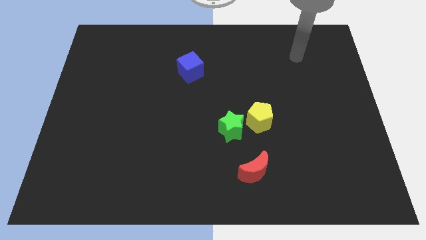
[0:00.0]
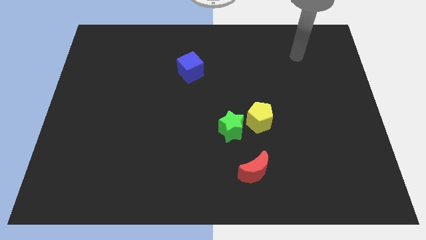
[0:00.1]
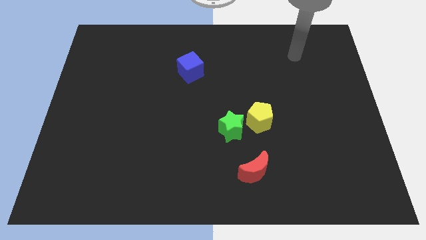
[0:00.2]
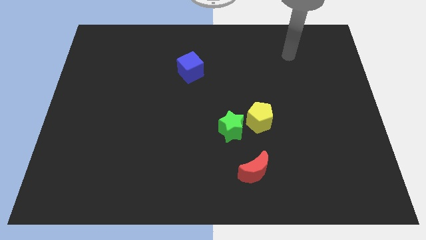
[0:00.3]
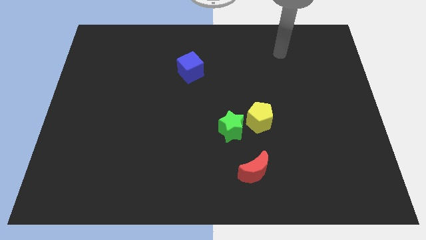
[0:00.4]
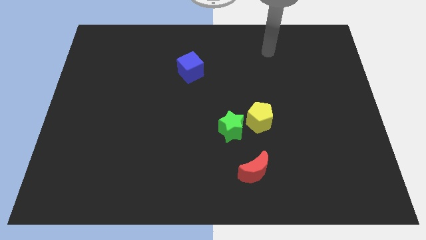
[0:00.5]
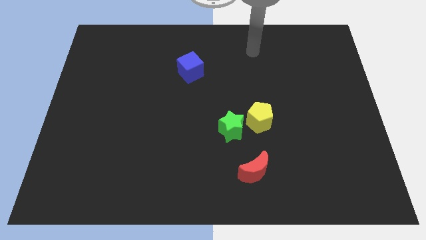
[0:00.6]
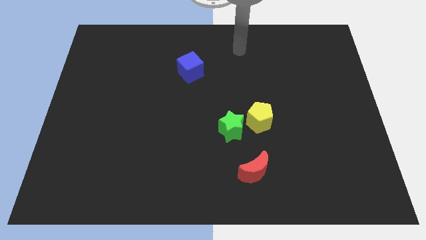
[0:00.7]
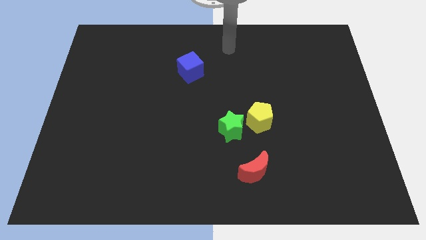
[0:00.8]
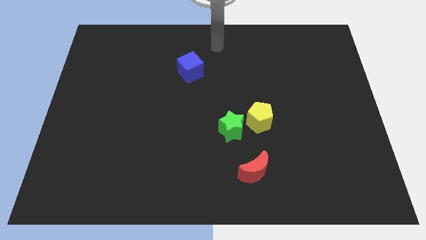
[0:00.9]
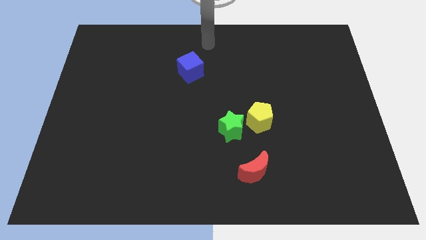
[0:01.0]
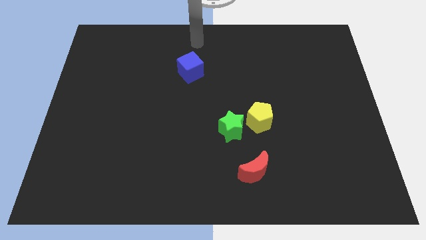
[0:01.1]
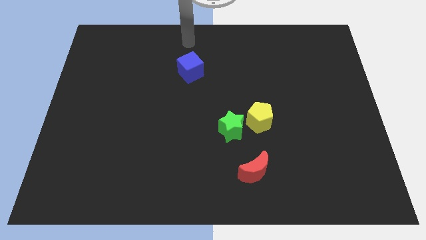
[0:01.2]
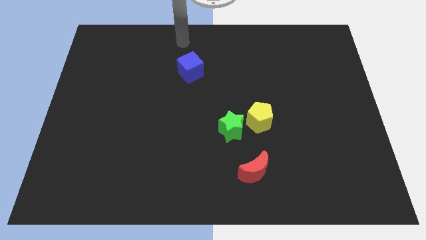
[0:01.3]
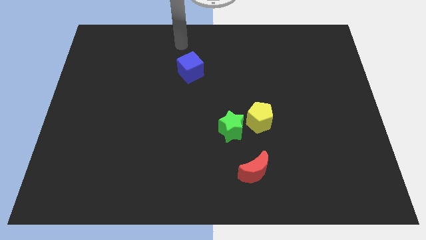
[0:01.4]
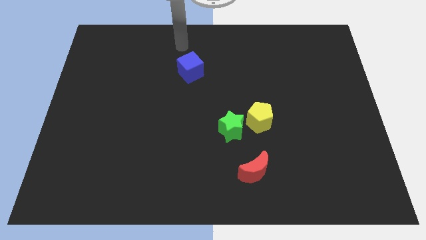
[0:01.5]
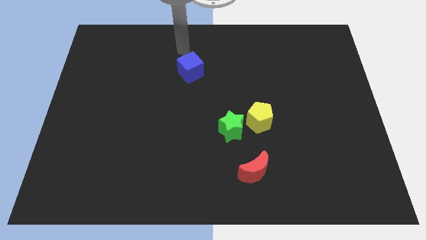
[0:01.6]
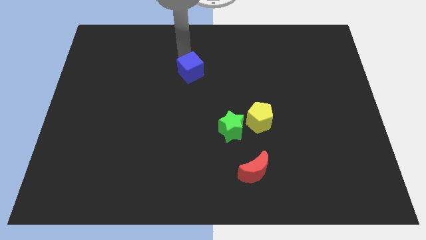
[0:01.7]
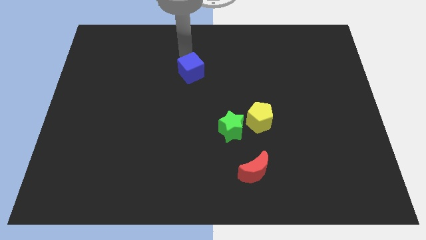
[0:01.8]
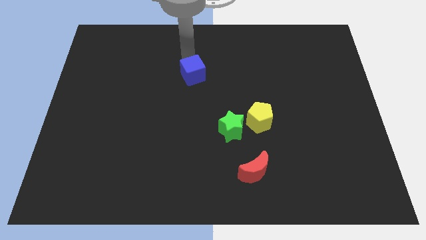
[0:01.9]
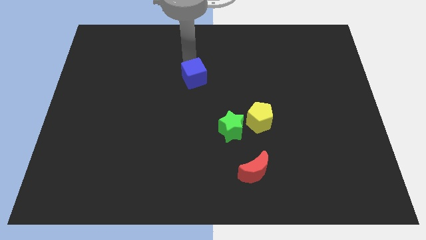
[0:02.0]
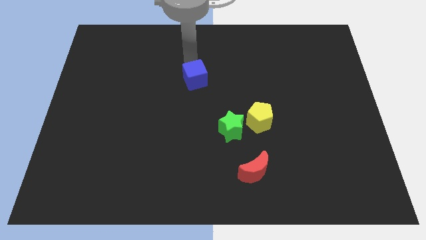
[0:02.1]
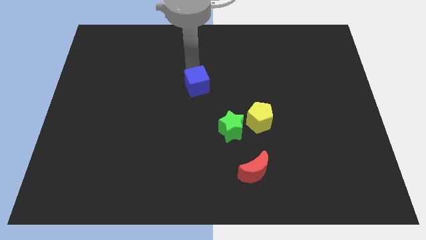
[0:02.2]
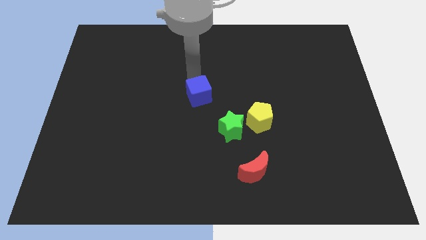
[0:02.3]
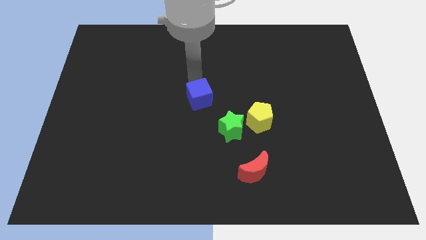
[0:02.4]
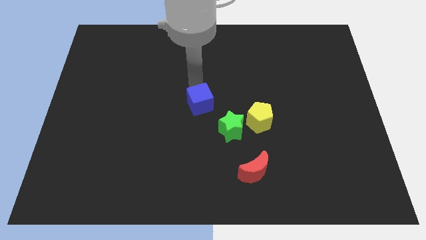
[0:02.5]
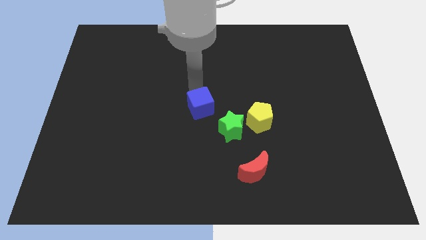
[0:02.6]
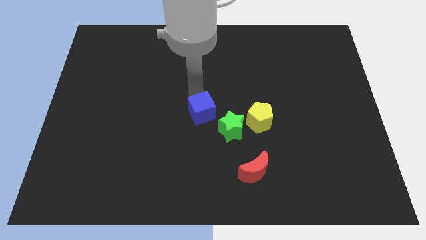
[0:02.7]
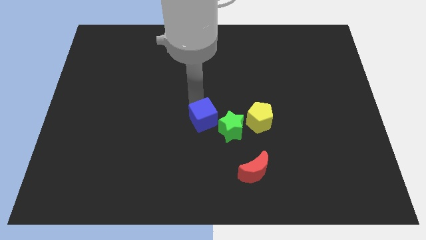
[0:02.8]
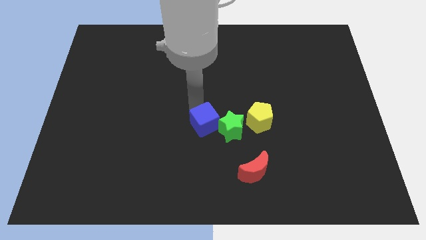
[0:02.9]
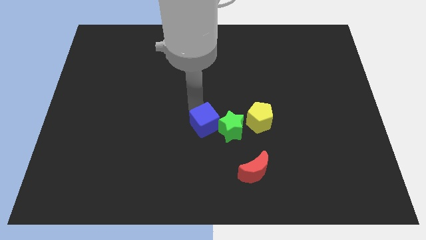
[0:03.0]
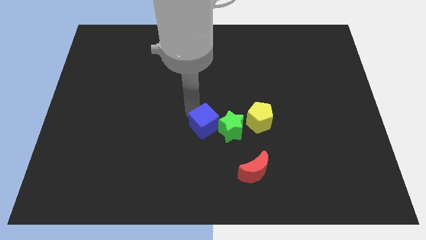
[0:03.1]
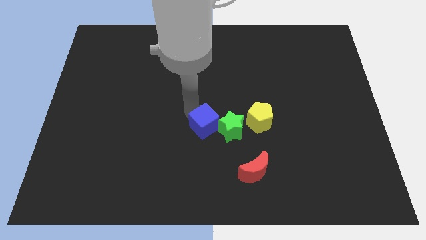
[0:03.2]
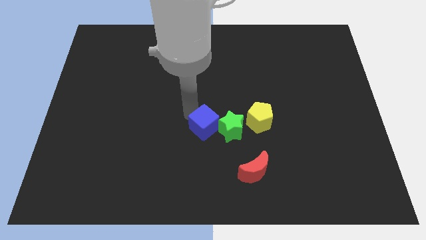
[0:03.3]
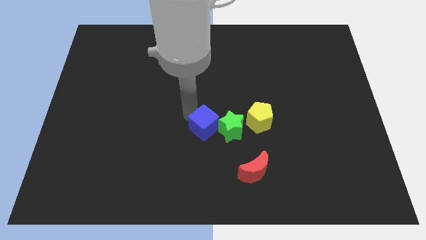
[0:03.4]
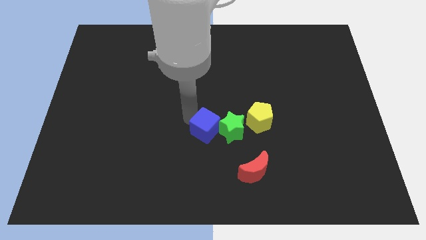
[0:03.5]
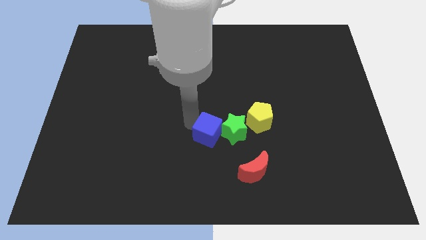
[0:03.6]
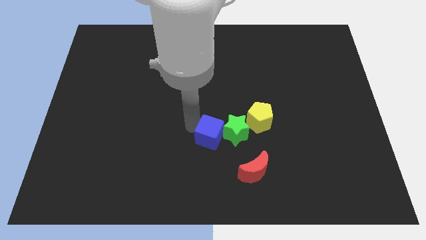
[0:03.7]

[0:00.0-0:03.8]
move the cube to the green block

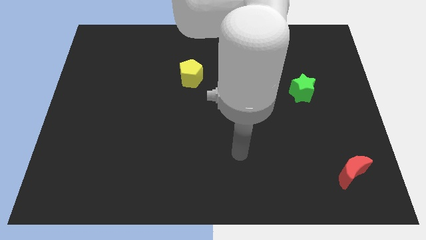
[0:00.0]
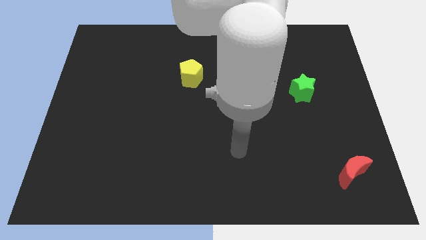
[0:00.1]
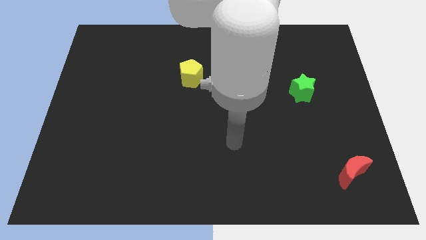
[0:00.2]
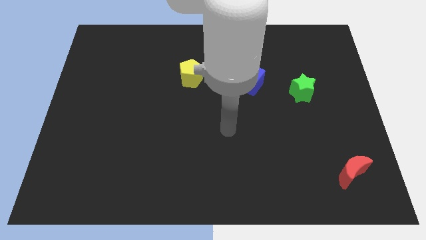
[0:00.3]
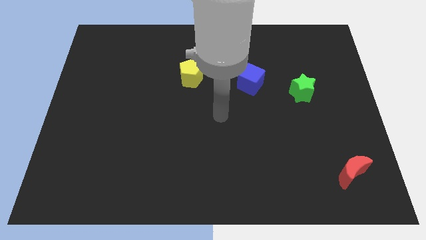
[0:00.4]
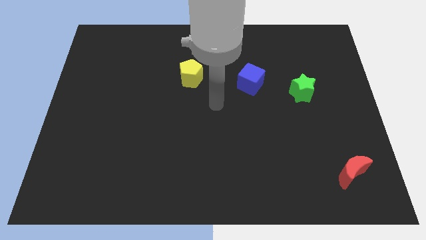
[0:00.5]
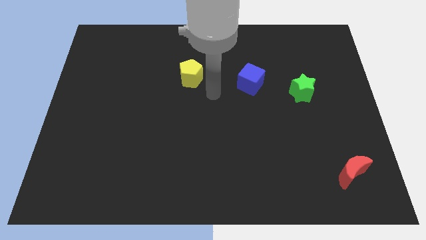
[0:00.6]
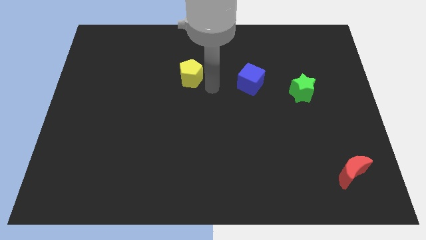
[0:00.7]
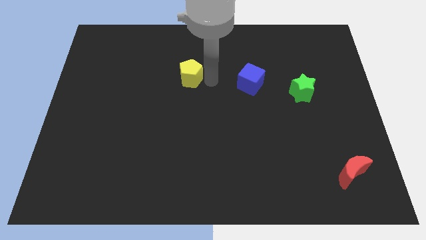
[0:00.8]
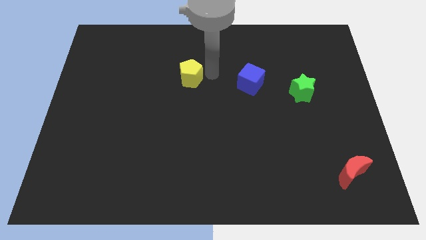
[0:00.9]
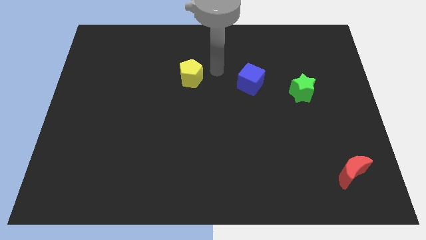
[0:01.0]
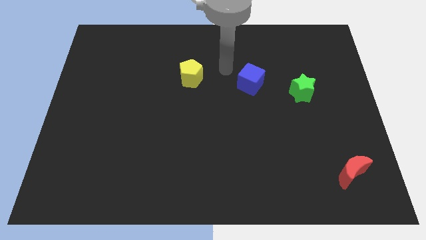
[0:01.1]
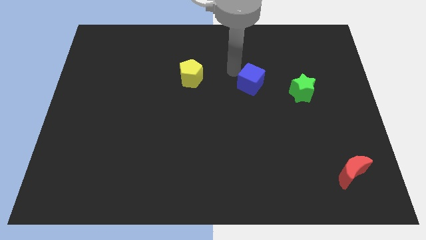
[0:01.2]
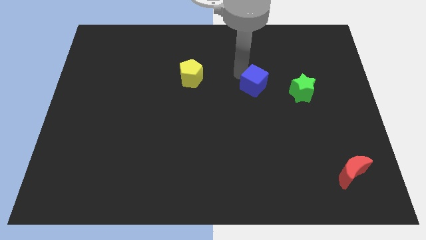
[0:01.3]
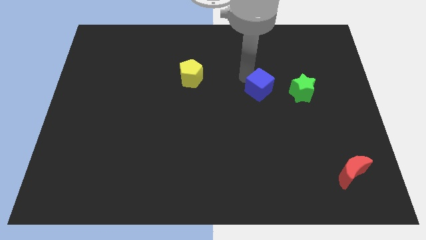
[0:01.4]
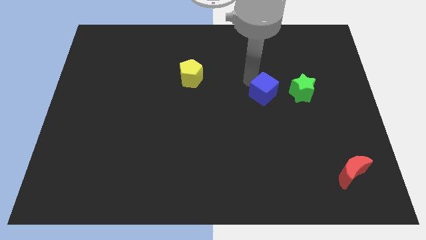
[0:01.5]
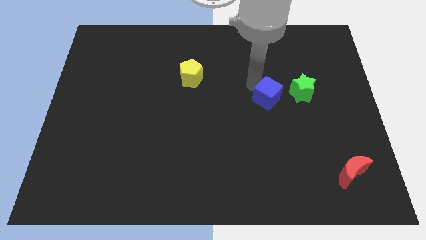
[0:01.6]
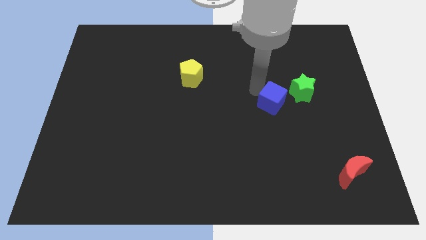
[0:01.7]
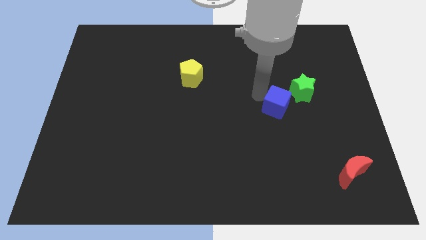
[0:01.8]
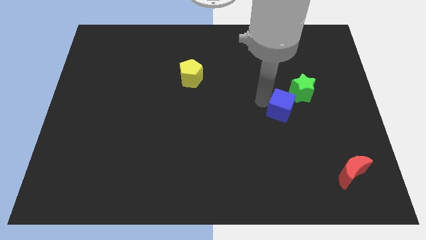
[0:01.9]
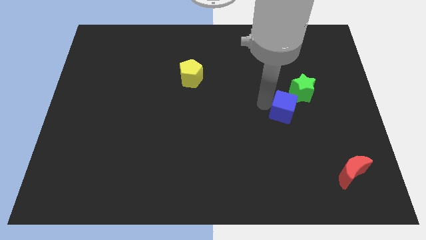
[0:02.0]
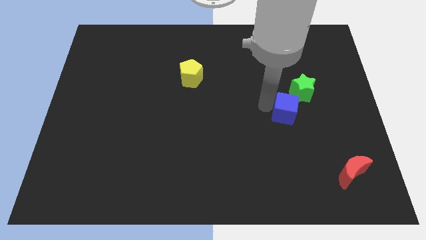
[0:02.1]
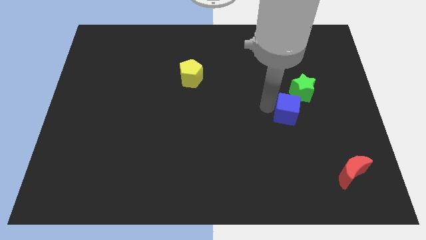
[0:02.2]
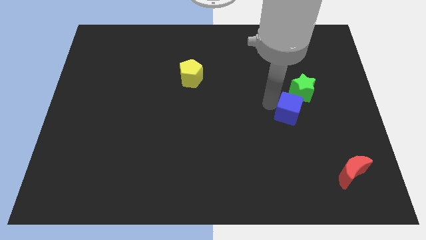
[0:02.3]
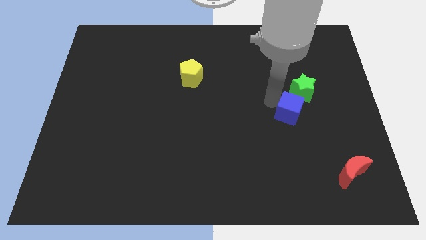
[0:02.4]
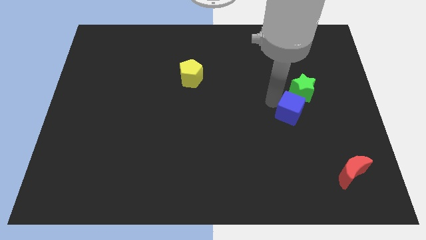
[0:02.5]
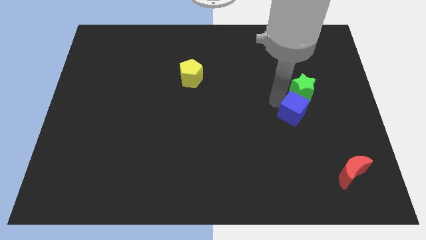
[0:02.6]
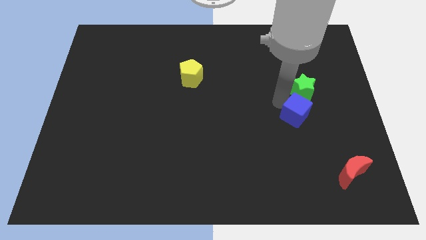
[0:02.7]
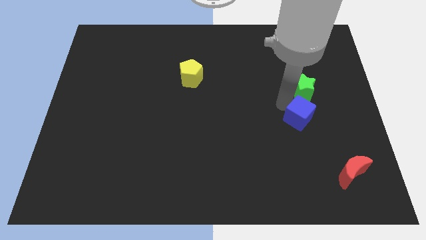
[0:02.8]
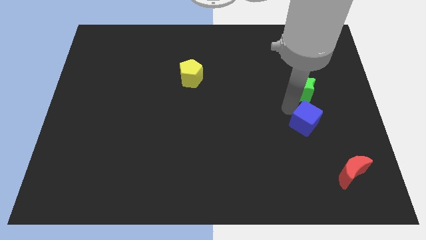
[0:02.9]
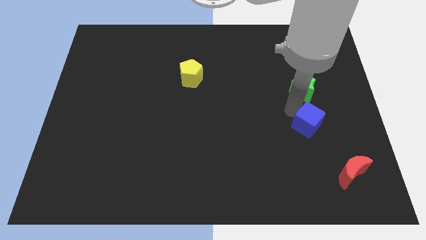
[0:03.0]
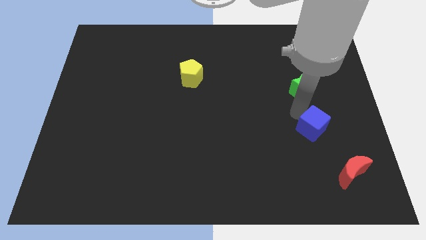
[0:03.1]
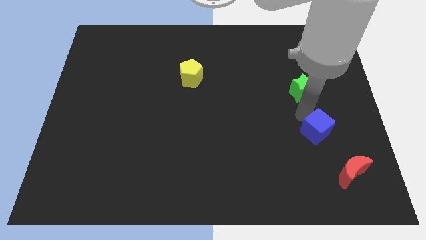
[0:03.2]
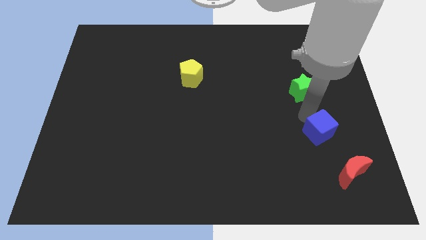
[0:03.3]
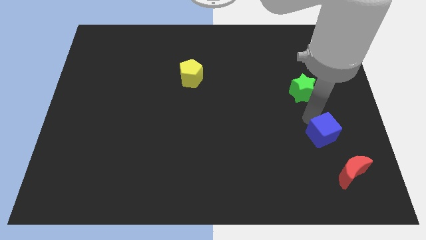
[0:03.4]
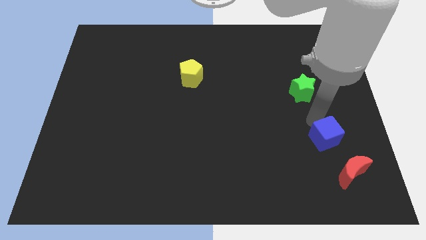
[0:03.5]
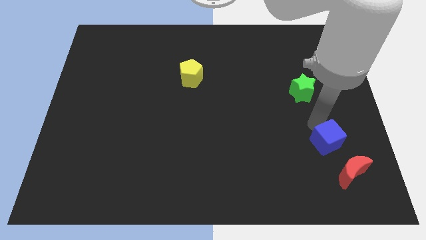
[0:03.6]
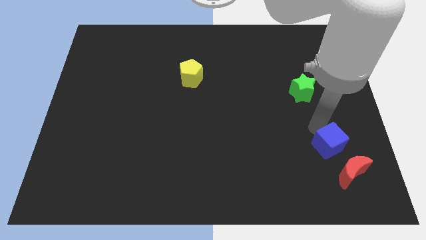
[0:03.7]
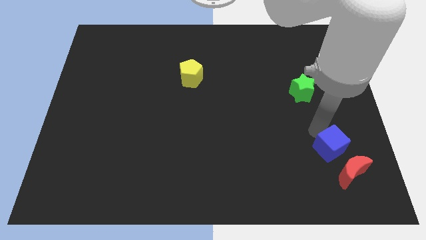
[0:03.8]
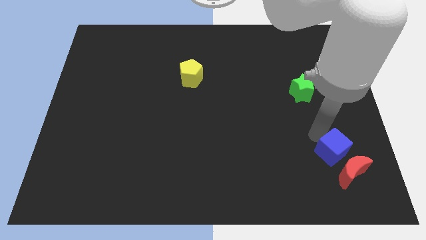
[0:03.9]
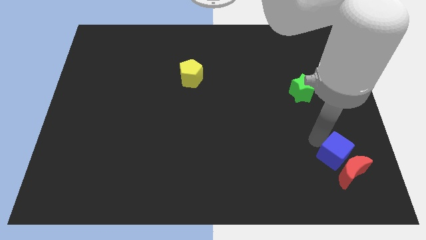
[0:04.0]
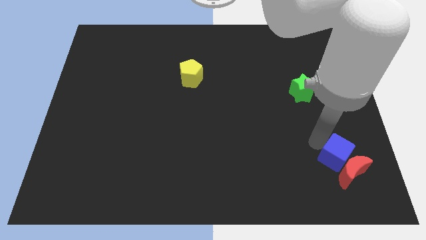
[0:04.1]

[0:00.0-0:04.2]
push the blue cube to the moon

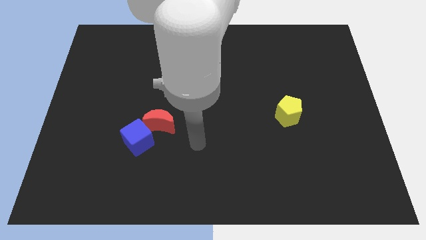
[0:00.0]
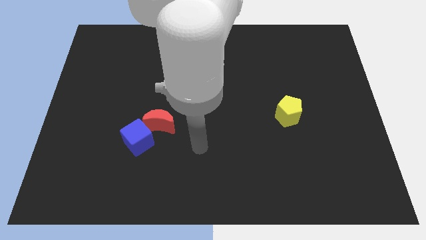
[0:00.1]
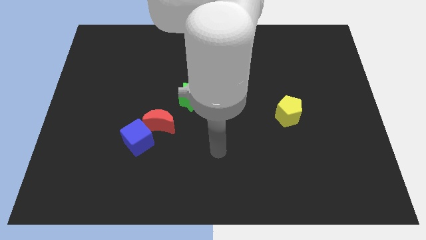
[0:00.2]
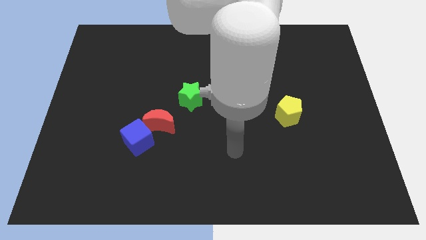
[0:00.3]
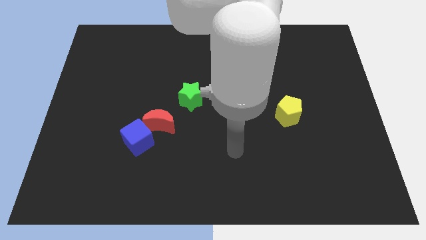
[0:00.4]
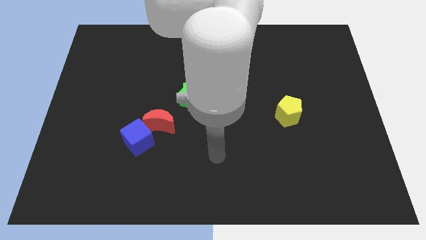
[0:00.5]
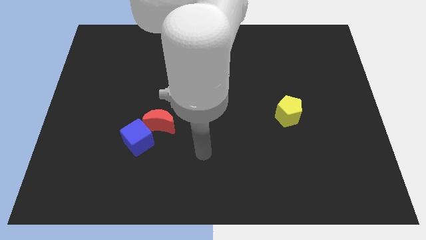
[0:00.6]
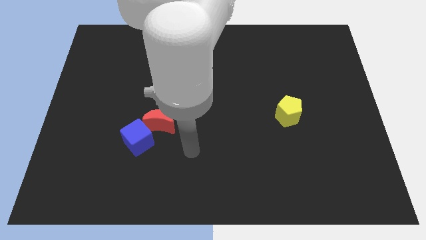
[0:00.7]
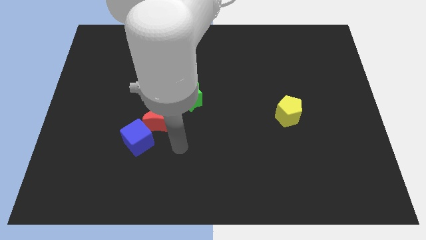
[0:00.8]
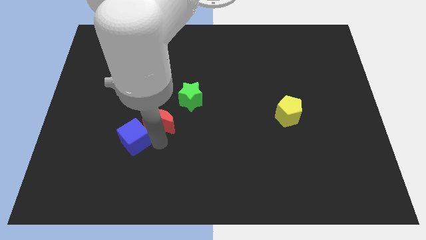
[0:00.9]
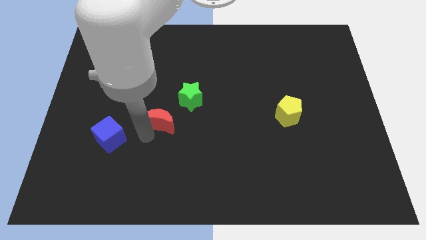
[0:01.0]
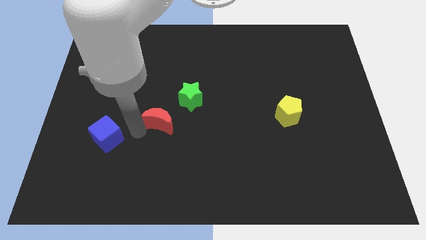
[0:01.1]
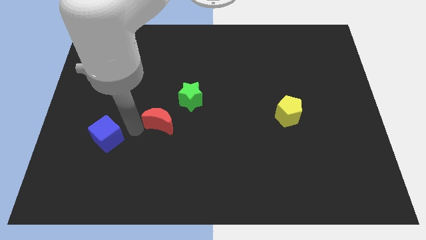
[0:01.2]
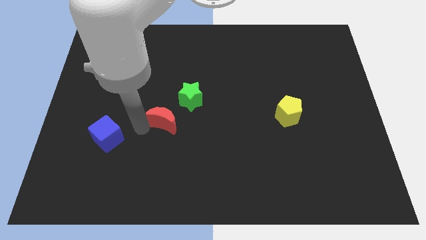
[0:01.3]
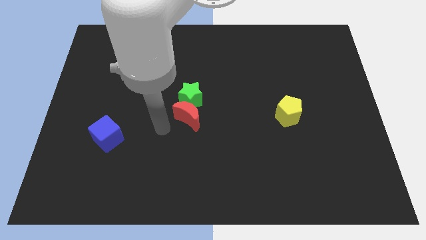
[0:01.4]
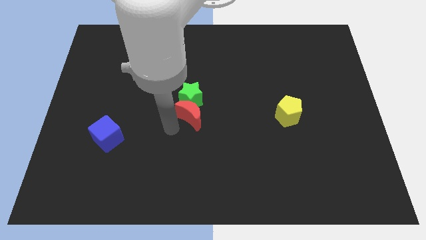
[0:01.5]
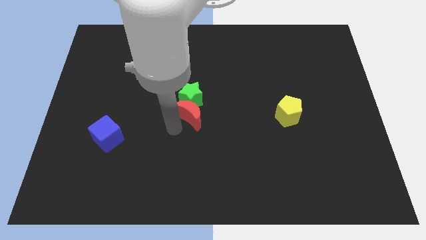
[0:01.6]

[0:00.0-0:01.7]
slide the red block to the green star
